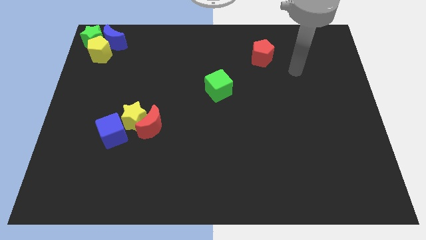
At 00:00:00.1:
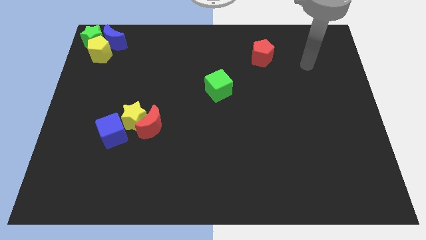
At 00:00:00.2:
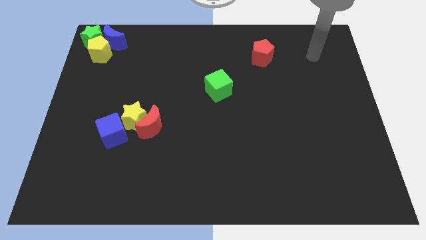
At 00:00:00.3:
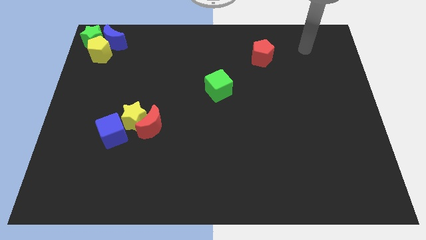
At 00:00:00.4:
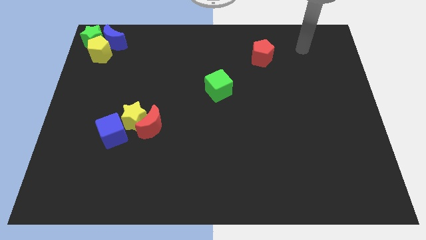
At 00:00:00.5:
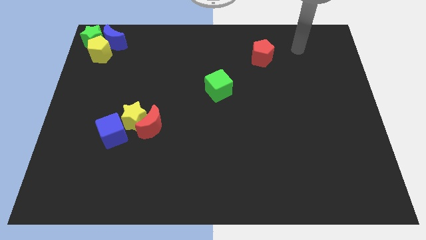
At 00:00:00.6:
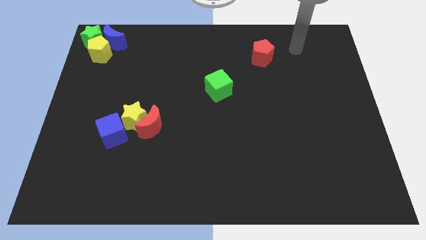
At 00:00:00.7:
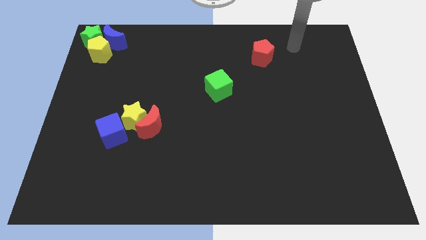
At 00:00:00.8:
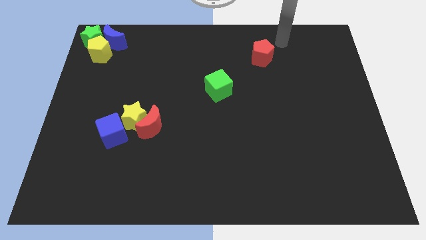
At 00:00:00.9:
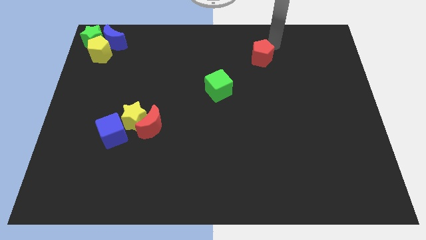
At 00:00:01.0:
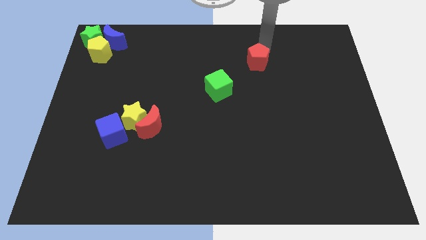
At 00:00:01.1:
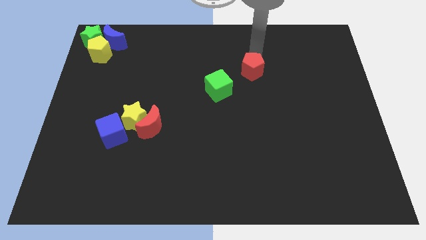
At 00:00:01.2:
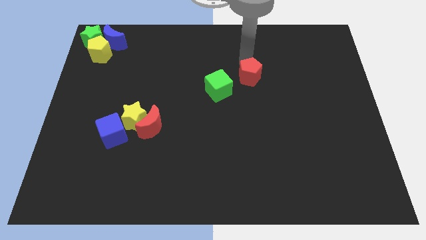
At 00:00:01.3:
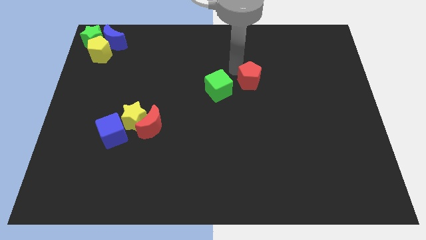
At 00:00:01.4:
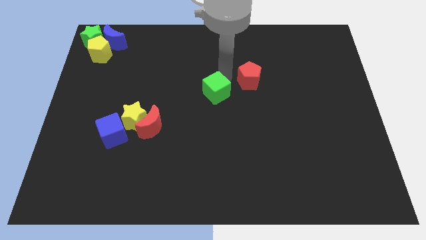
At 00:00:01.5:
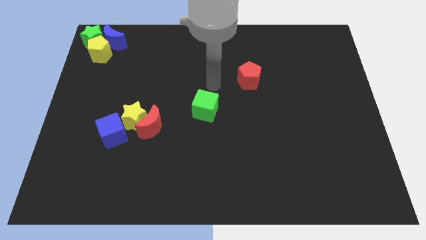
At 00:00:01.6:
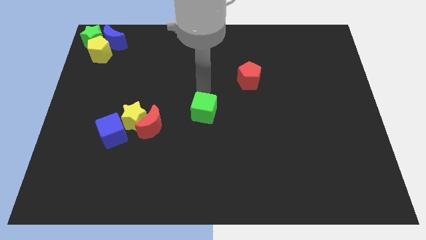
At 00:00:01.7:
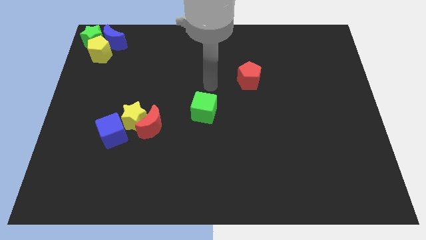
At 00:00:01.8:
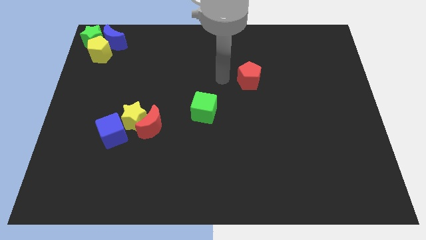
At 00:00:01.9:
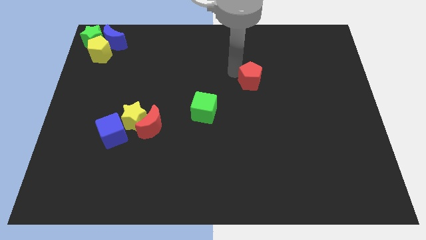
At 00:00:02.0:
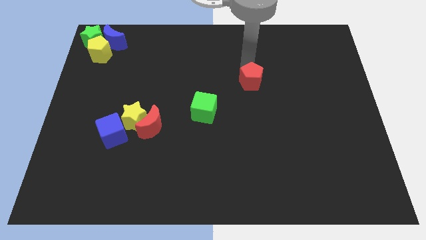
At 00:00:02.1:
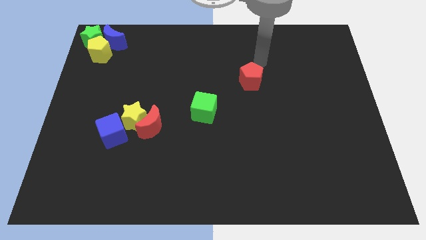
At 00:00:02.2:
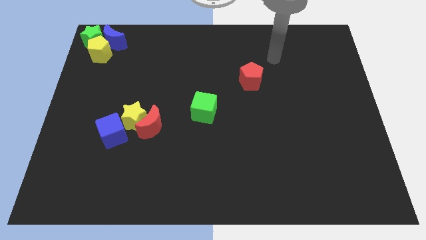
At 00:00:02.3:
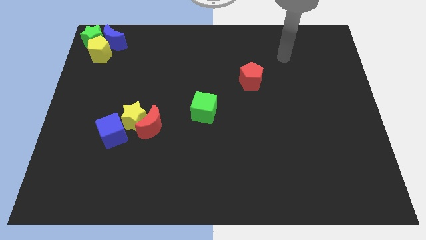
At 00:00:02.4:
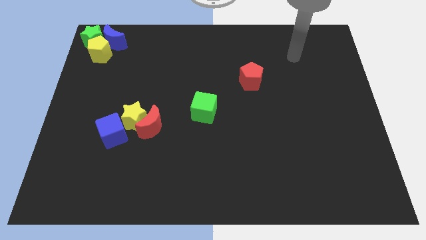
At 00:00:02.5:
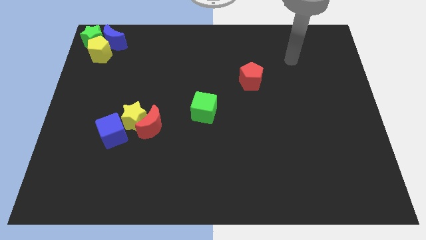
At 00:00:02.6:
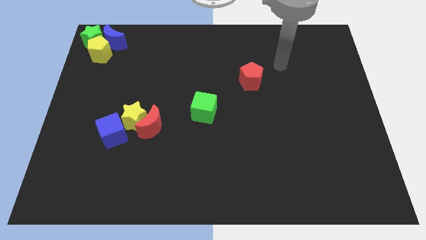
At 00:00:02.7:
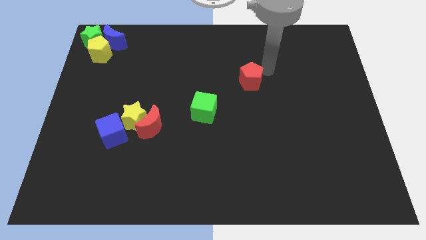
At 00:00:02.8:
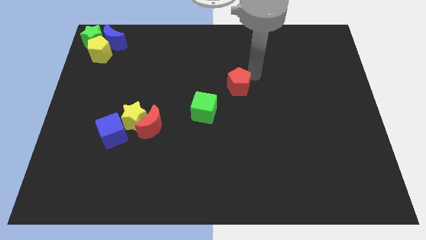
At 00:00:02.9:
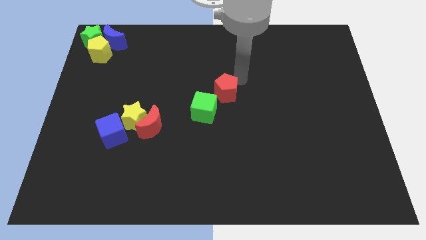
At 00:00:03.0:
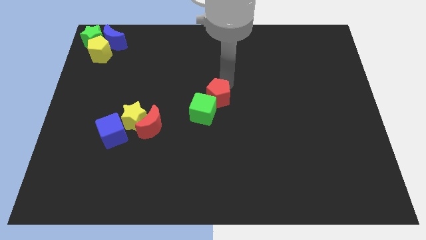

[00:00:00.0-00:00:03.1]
place red pentagon on top right of green cube

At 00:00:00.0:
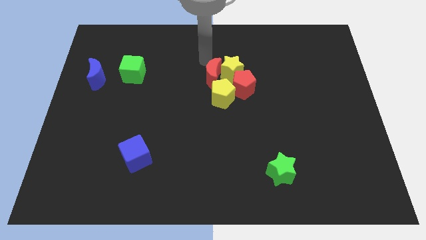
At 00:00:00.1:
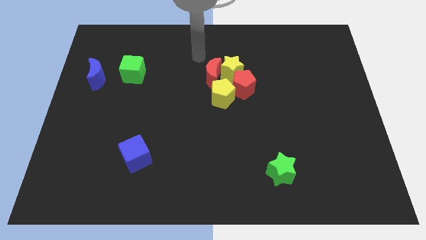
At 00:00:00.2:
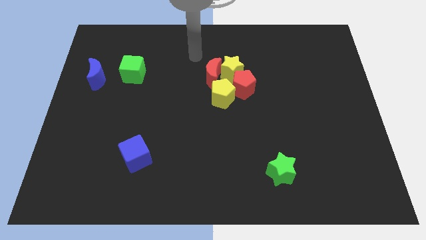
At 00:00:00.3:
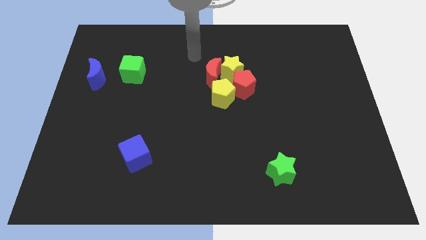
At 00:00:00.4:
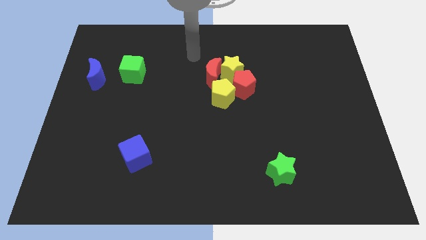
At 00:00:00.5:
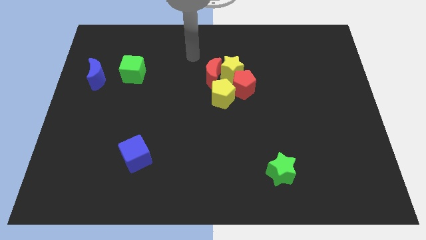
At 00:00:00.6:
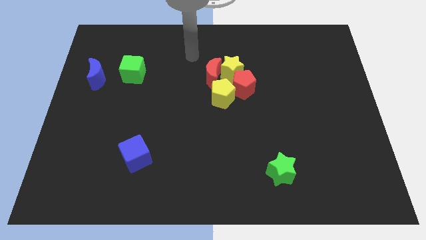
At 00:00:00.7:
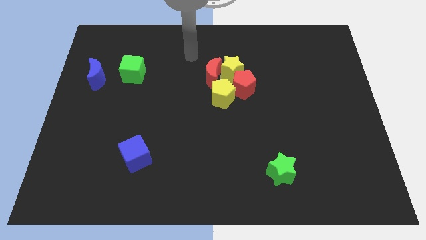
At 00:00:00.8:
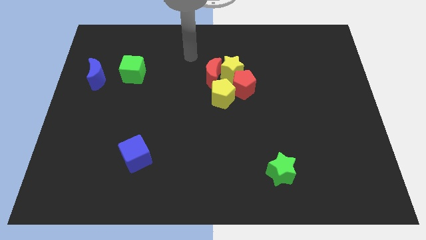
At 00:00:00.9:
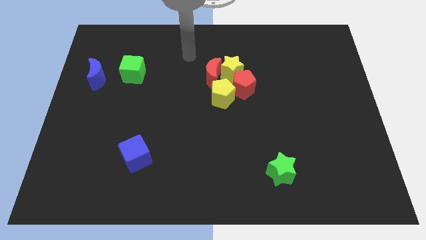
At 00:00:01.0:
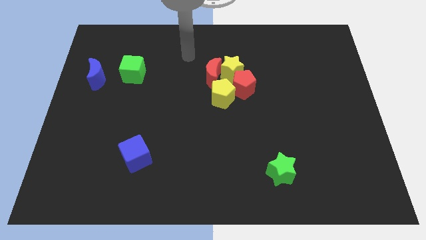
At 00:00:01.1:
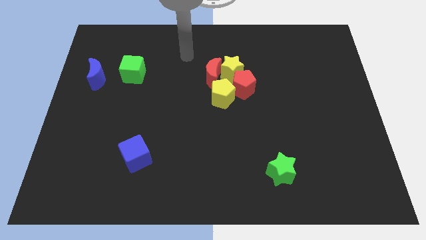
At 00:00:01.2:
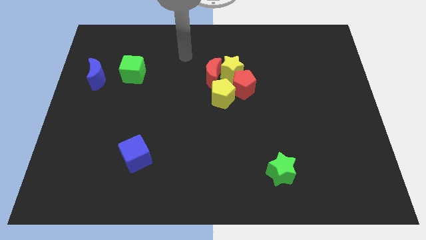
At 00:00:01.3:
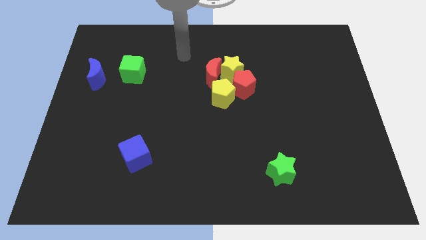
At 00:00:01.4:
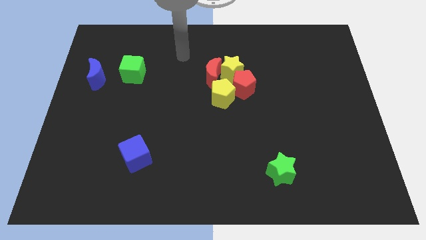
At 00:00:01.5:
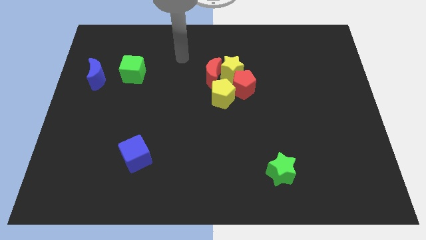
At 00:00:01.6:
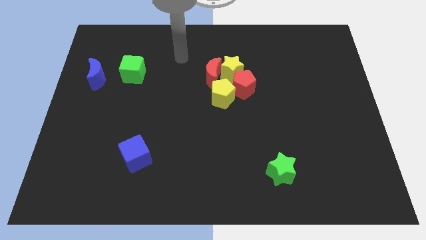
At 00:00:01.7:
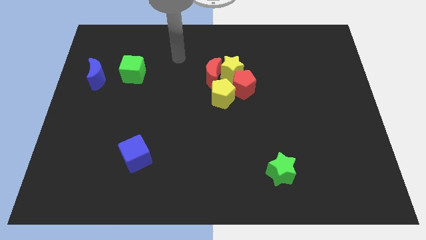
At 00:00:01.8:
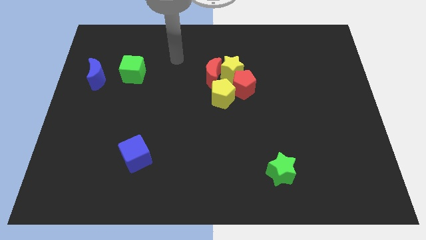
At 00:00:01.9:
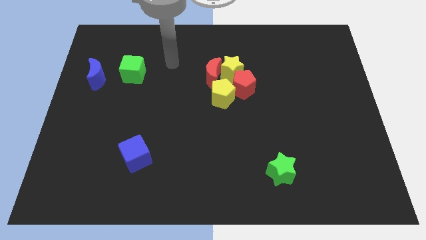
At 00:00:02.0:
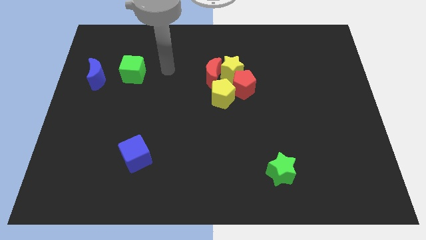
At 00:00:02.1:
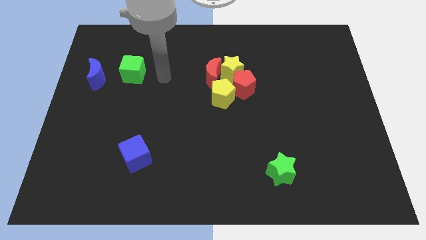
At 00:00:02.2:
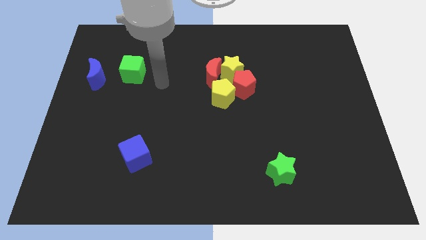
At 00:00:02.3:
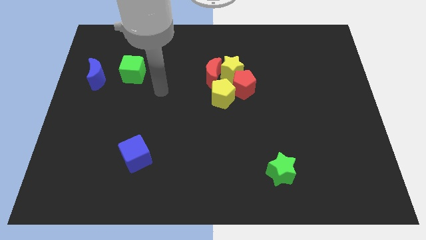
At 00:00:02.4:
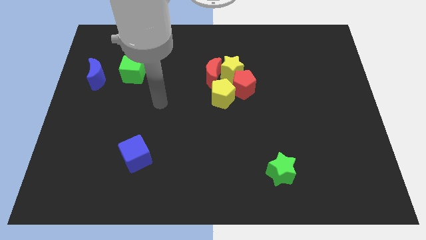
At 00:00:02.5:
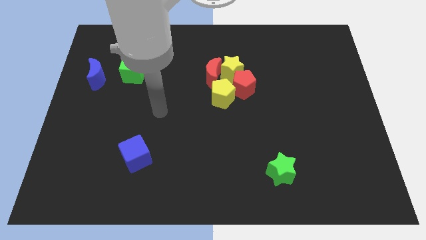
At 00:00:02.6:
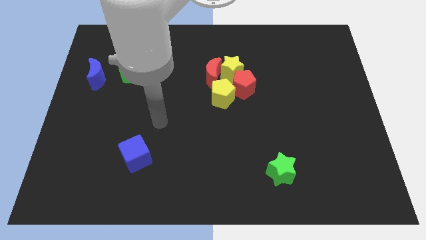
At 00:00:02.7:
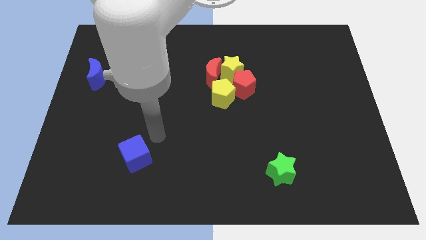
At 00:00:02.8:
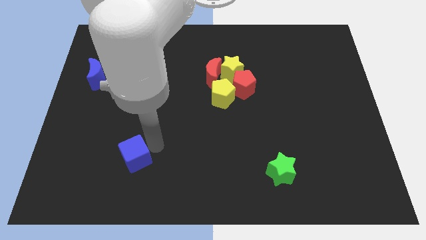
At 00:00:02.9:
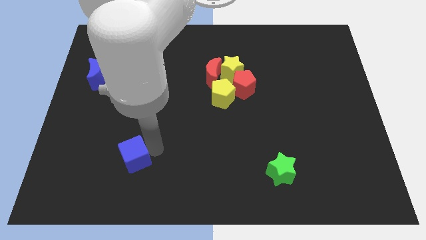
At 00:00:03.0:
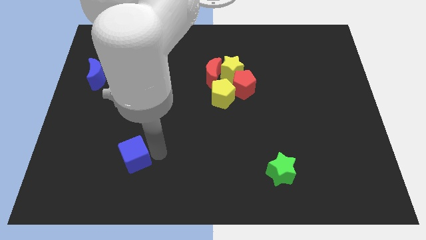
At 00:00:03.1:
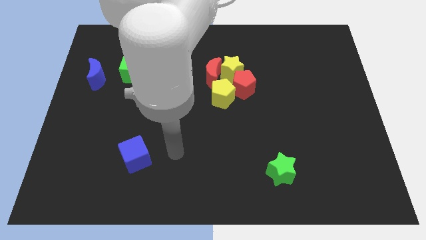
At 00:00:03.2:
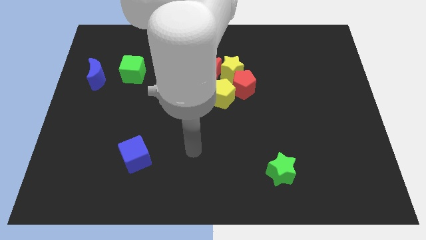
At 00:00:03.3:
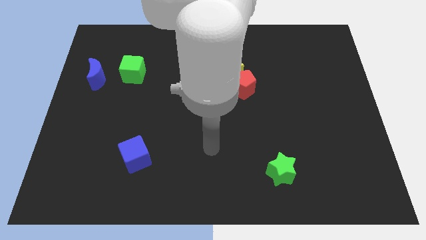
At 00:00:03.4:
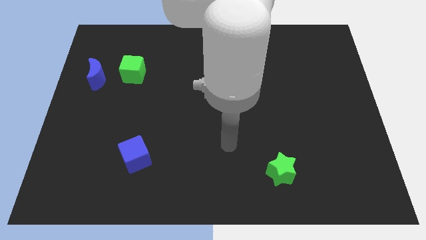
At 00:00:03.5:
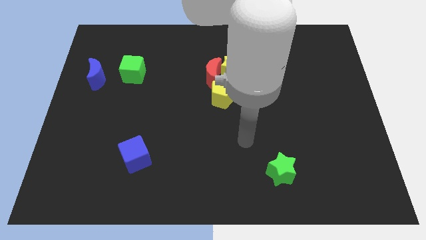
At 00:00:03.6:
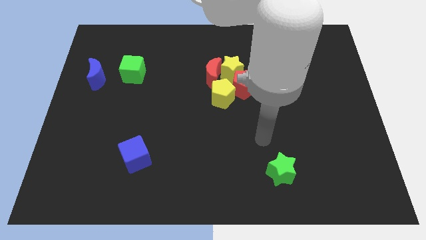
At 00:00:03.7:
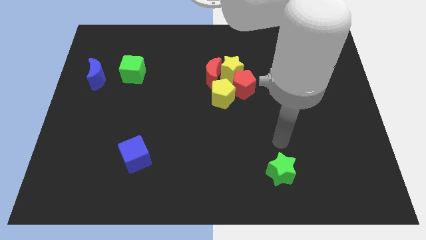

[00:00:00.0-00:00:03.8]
move your arm away from the red moon

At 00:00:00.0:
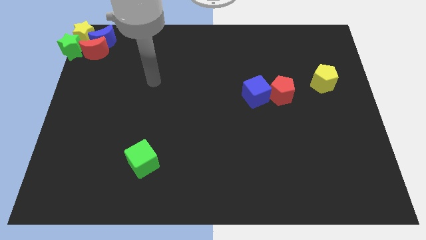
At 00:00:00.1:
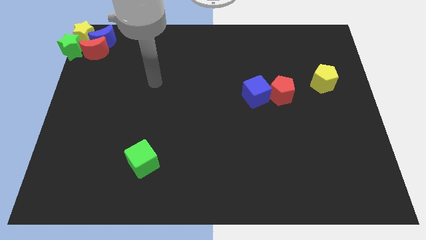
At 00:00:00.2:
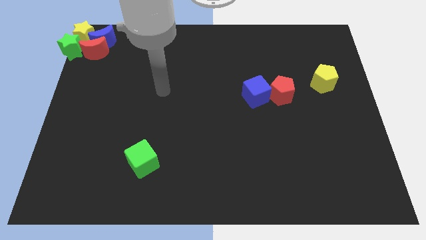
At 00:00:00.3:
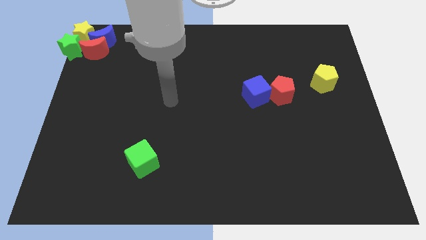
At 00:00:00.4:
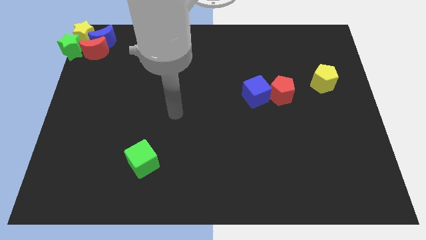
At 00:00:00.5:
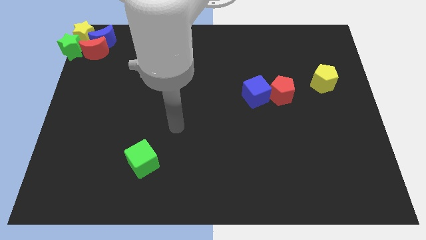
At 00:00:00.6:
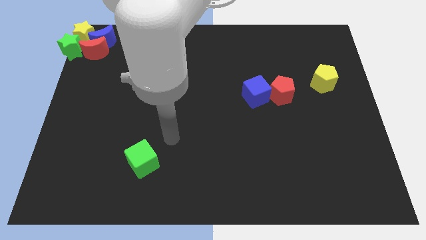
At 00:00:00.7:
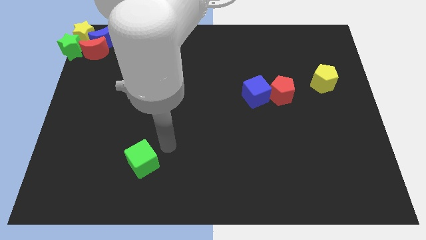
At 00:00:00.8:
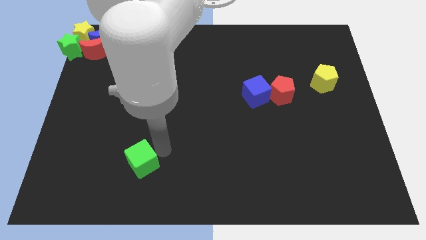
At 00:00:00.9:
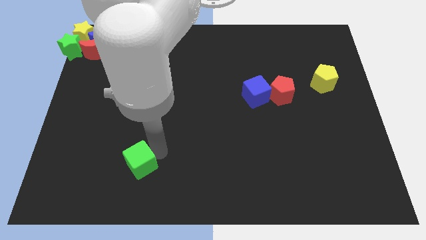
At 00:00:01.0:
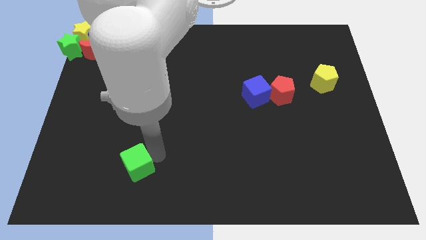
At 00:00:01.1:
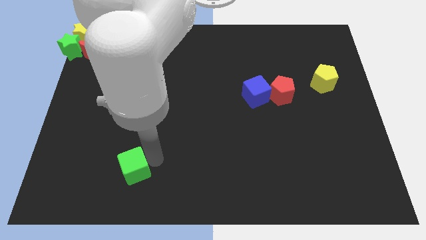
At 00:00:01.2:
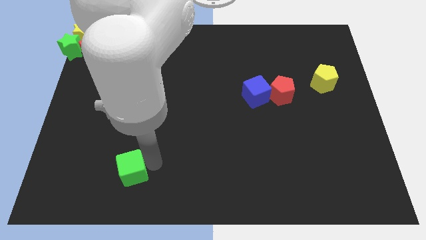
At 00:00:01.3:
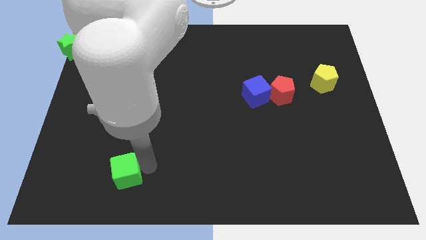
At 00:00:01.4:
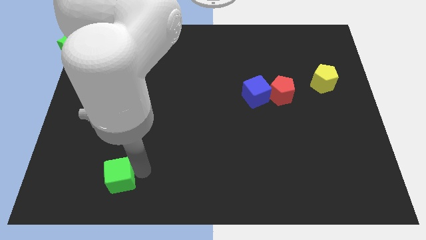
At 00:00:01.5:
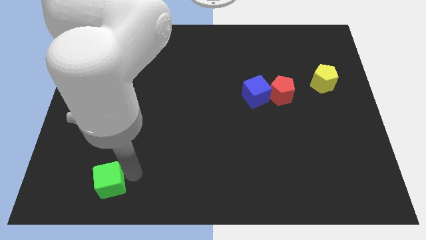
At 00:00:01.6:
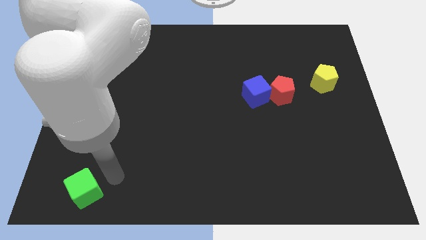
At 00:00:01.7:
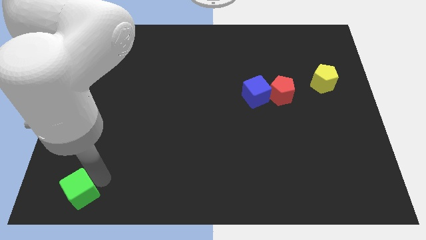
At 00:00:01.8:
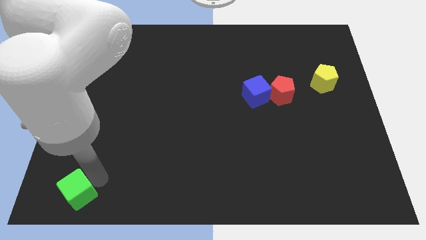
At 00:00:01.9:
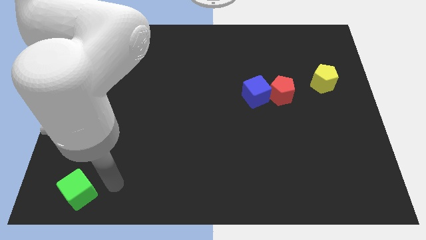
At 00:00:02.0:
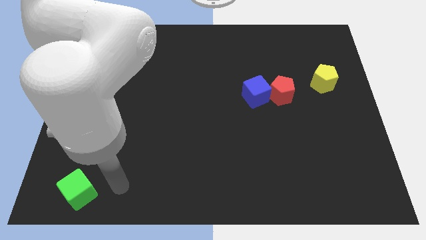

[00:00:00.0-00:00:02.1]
move the green cube towards the bottom left of board
